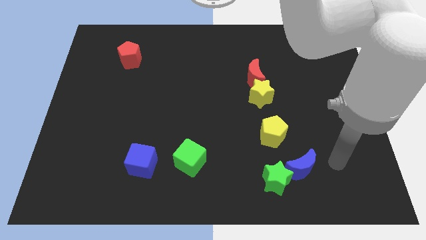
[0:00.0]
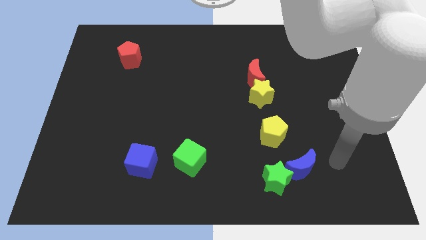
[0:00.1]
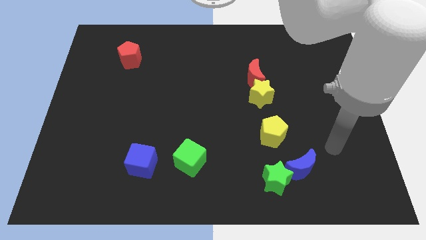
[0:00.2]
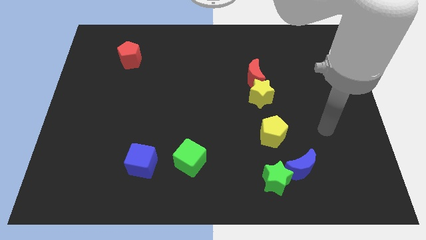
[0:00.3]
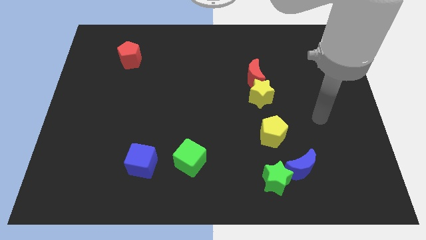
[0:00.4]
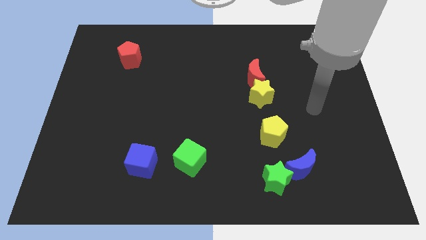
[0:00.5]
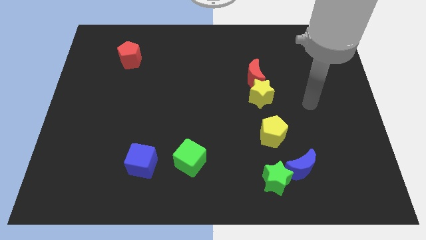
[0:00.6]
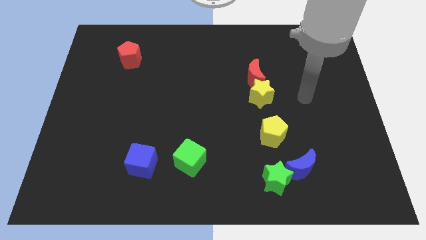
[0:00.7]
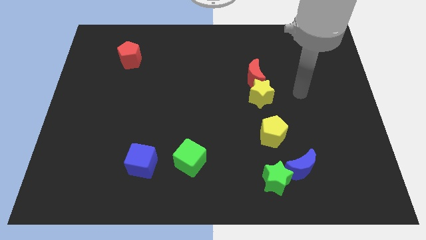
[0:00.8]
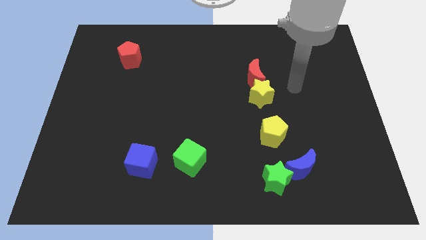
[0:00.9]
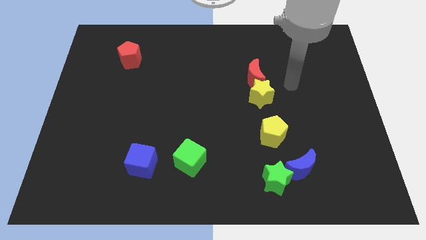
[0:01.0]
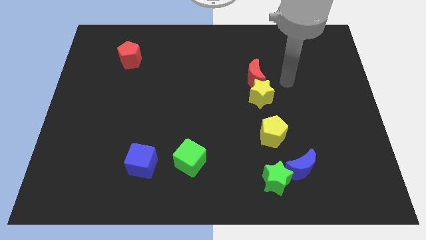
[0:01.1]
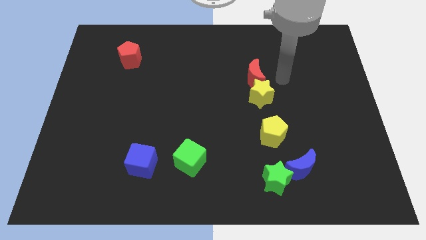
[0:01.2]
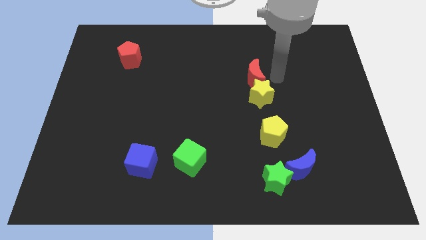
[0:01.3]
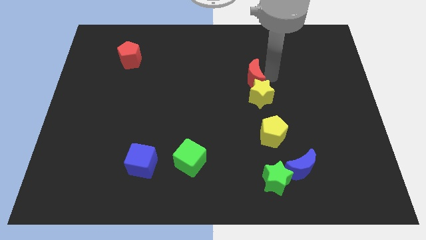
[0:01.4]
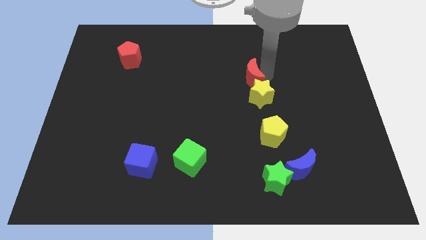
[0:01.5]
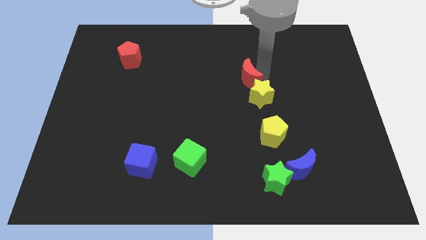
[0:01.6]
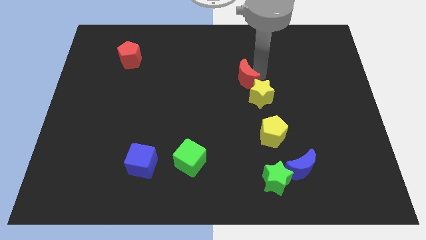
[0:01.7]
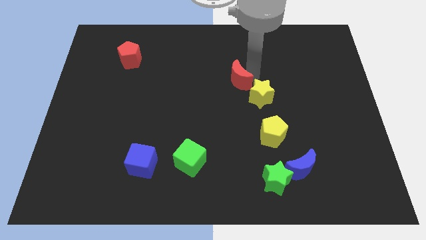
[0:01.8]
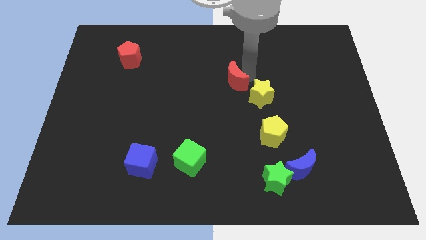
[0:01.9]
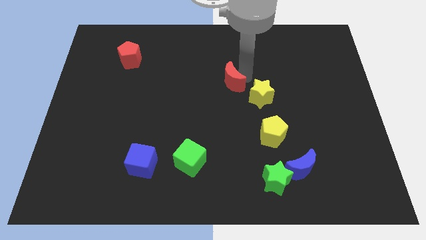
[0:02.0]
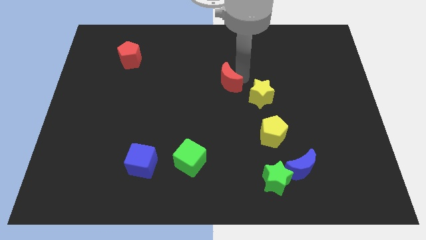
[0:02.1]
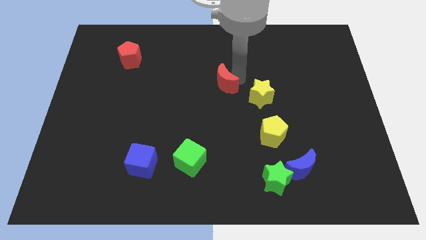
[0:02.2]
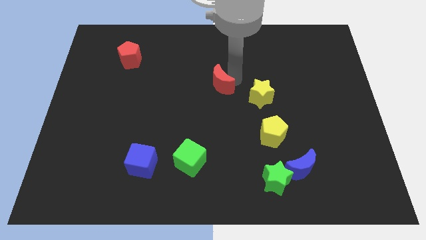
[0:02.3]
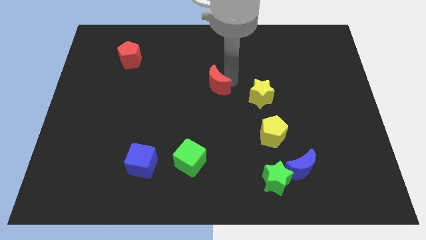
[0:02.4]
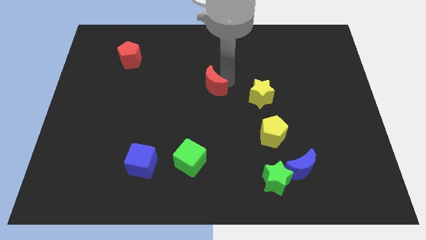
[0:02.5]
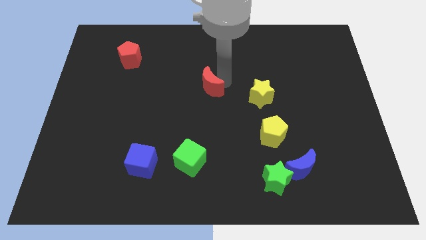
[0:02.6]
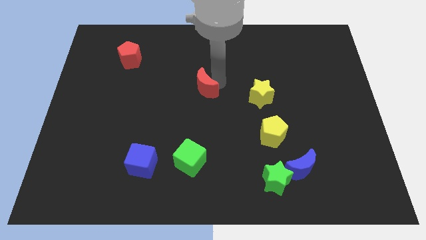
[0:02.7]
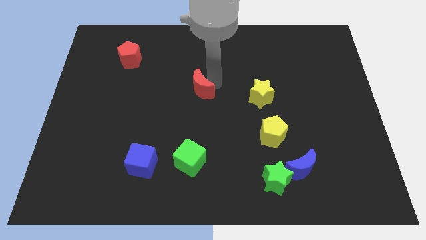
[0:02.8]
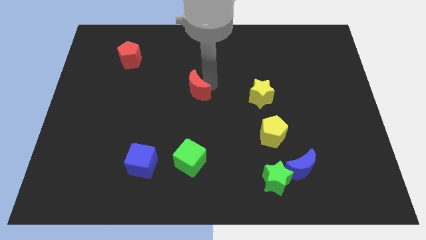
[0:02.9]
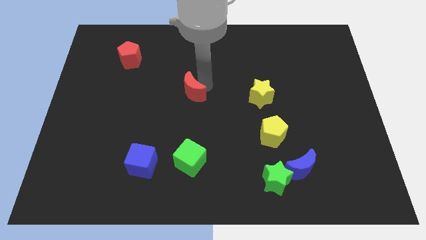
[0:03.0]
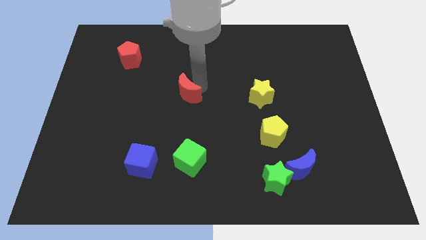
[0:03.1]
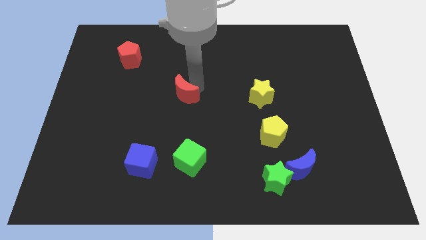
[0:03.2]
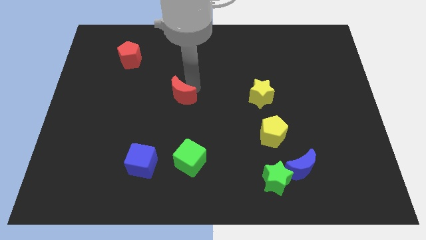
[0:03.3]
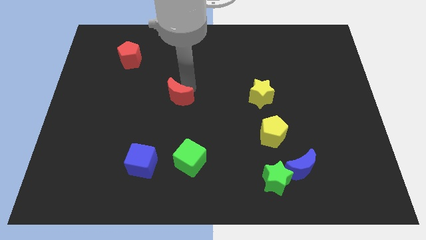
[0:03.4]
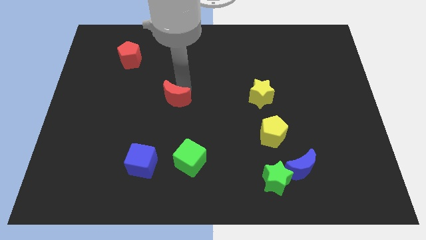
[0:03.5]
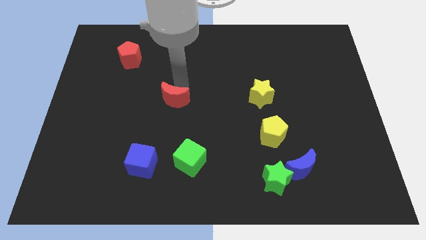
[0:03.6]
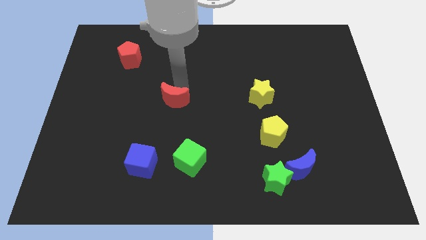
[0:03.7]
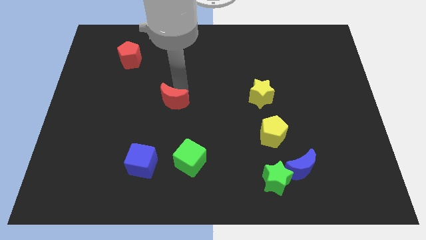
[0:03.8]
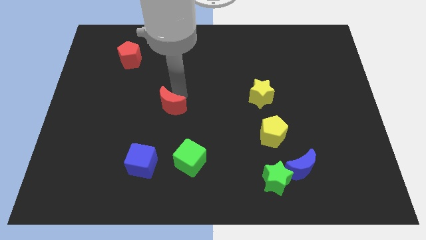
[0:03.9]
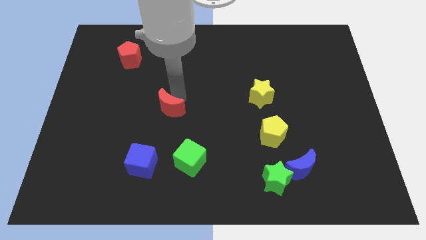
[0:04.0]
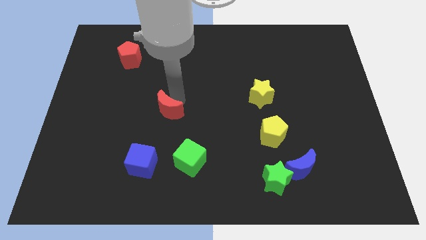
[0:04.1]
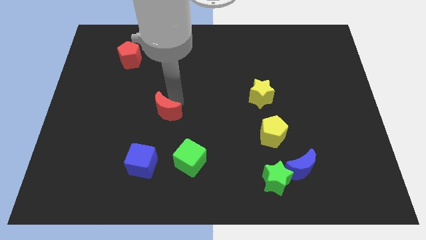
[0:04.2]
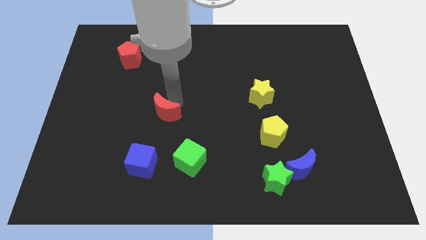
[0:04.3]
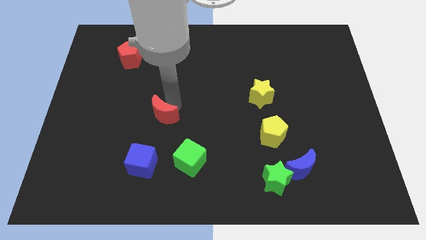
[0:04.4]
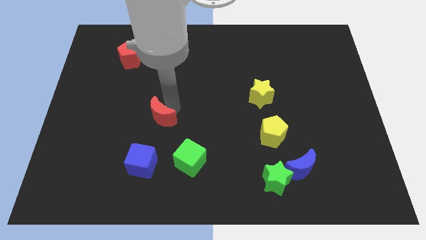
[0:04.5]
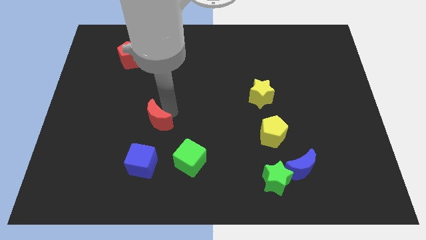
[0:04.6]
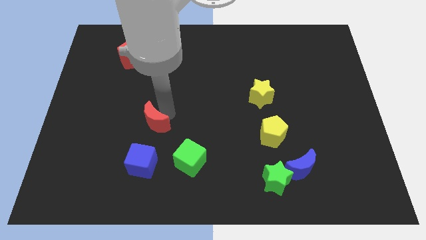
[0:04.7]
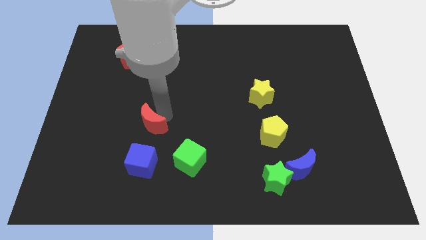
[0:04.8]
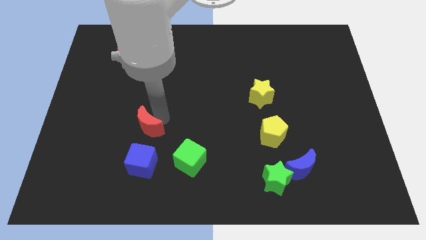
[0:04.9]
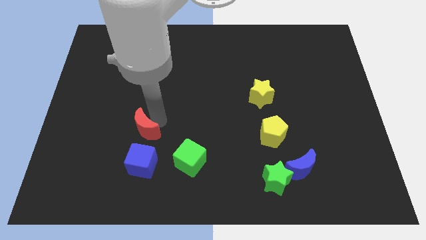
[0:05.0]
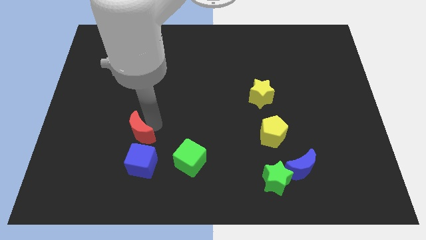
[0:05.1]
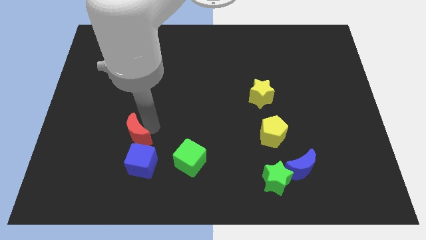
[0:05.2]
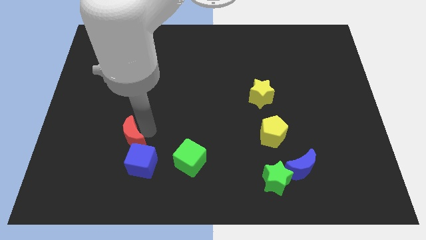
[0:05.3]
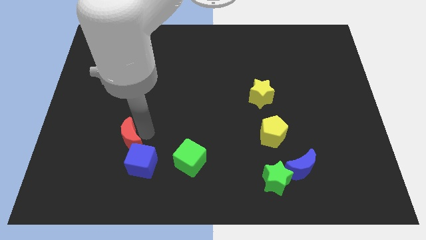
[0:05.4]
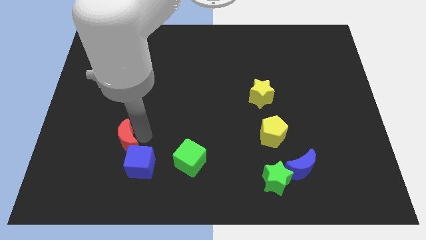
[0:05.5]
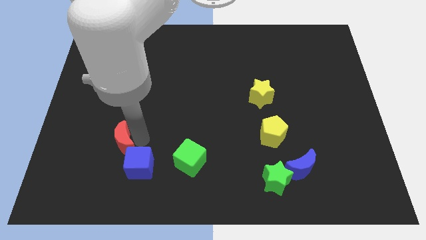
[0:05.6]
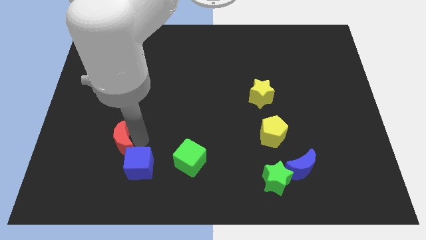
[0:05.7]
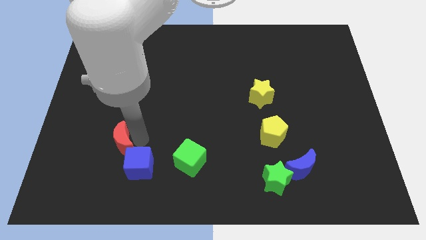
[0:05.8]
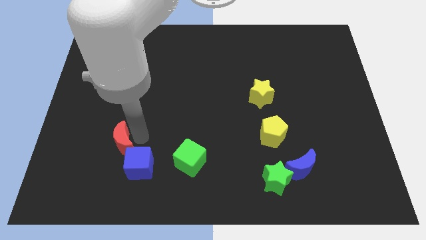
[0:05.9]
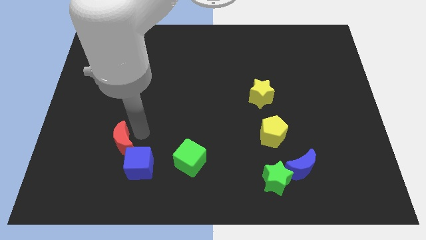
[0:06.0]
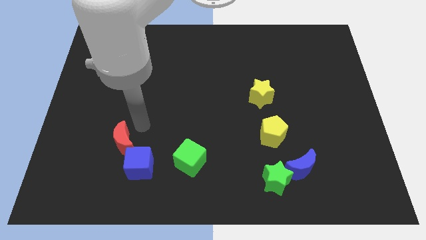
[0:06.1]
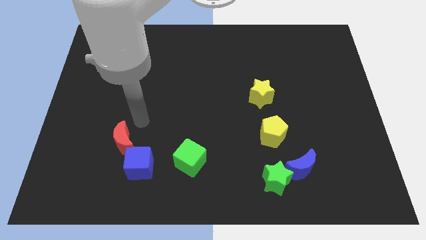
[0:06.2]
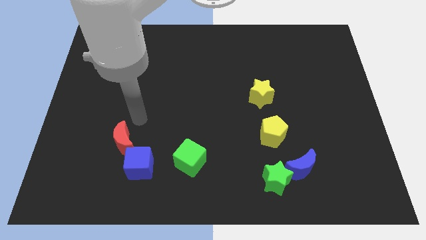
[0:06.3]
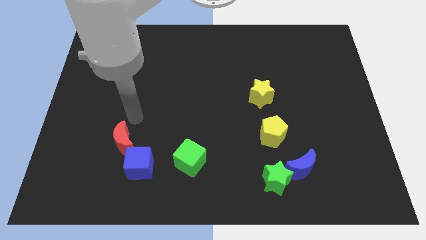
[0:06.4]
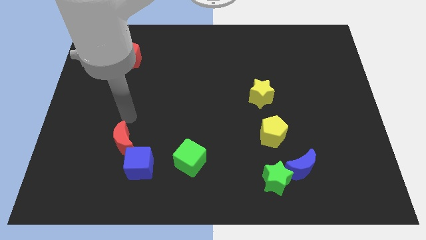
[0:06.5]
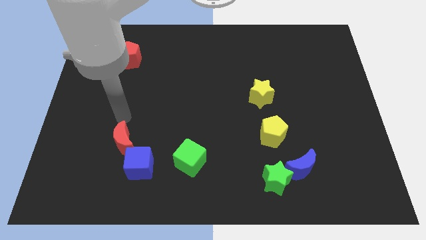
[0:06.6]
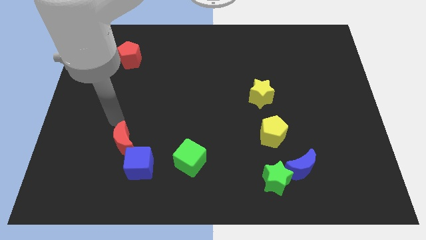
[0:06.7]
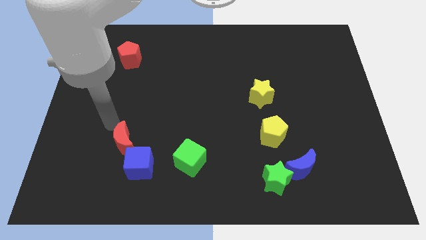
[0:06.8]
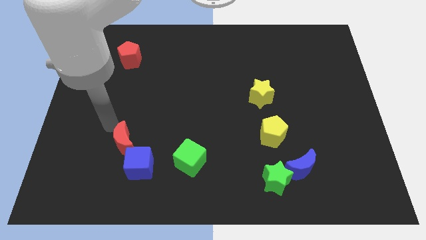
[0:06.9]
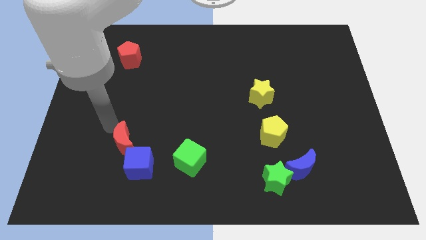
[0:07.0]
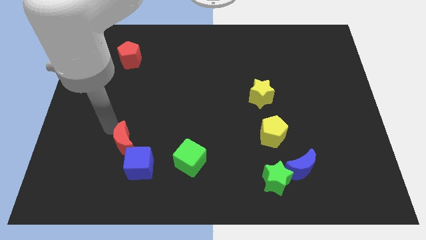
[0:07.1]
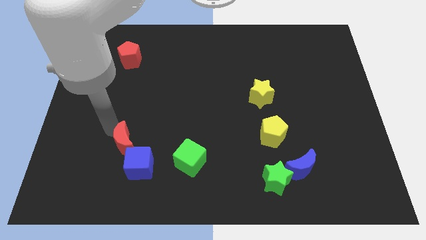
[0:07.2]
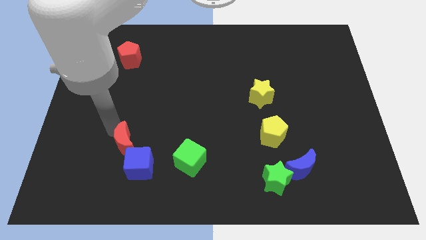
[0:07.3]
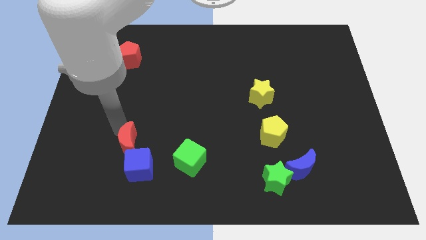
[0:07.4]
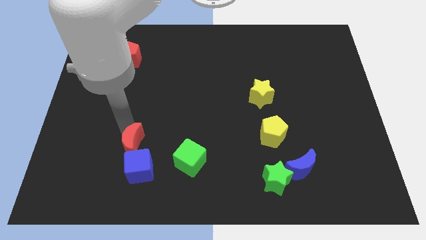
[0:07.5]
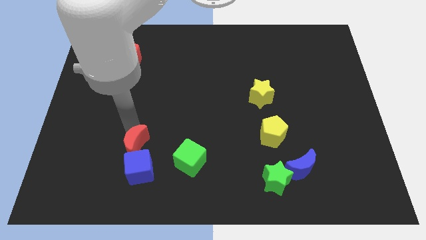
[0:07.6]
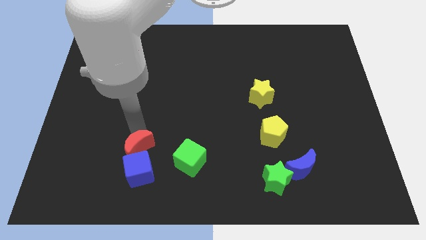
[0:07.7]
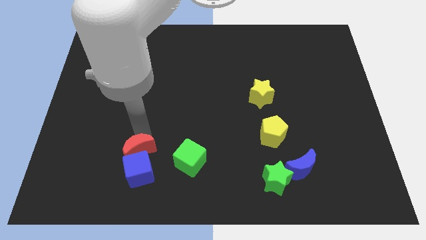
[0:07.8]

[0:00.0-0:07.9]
put the red moon to the blue cube

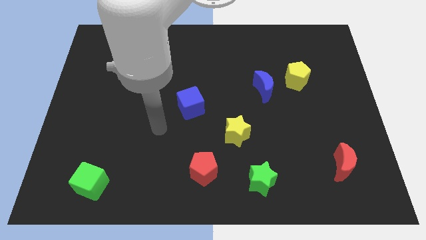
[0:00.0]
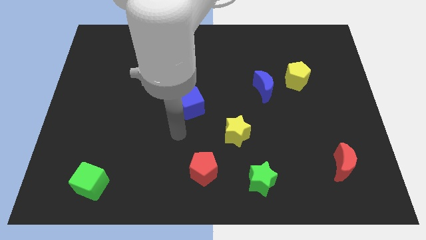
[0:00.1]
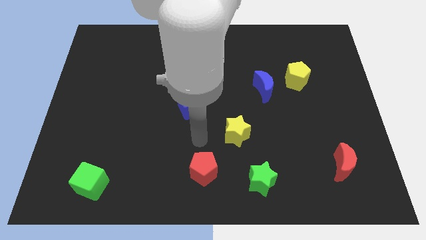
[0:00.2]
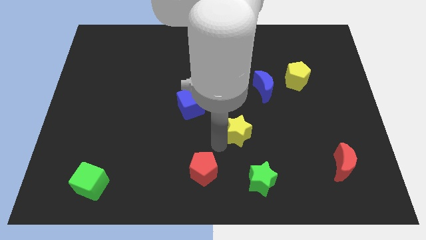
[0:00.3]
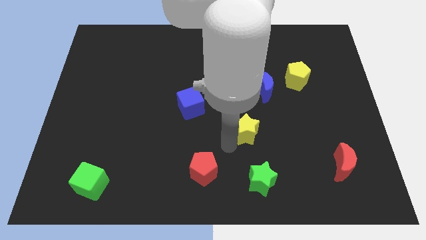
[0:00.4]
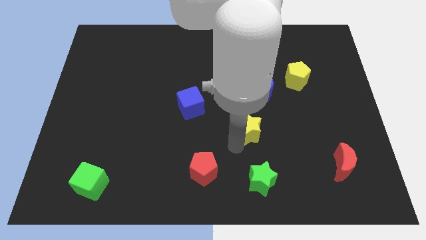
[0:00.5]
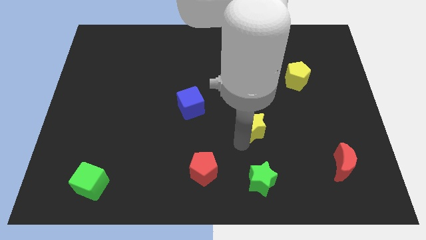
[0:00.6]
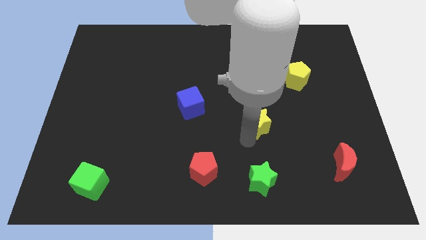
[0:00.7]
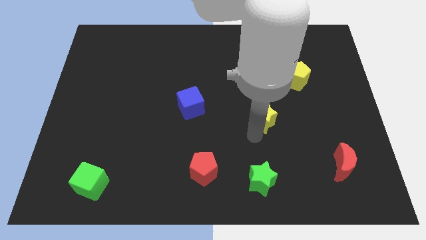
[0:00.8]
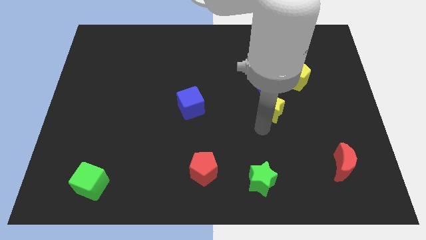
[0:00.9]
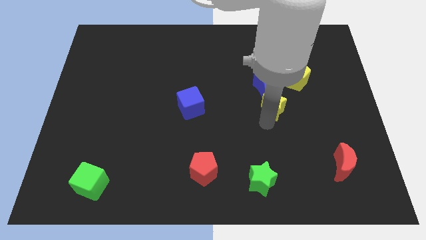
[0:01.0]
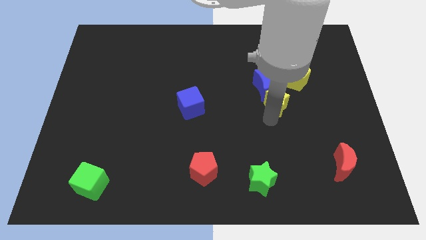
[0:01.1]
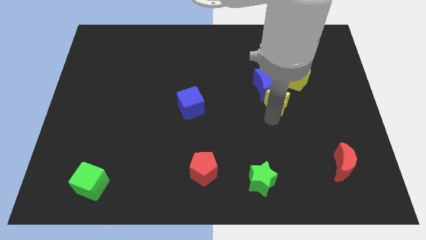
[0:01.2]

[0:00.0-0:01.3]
push the yellow star towards the blue moon
